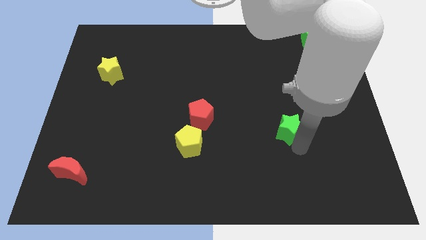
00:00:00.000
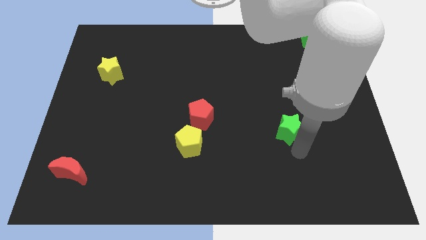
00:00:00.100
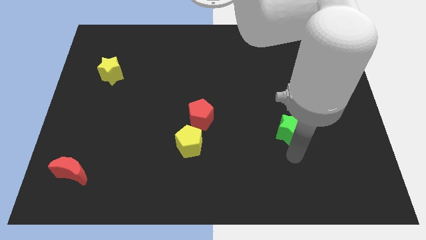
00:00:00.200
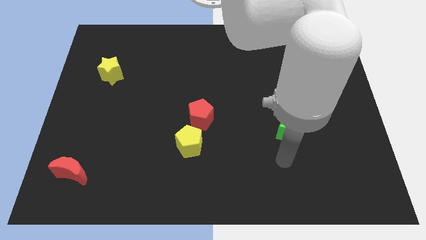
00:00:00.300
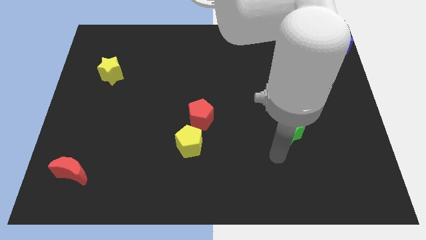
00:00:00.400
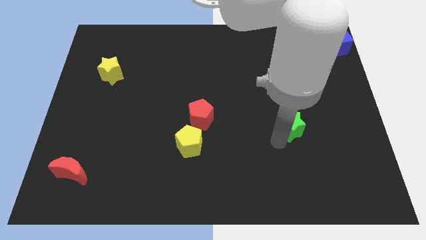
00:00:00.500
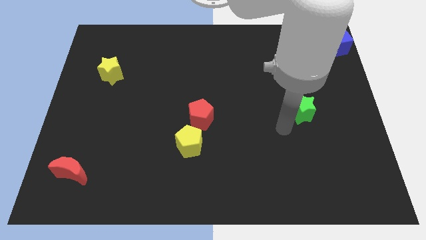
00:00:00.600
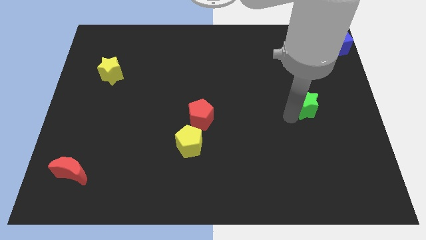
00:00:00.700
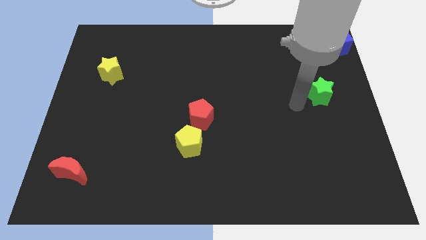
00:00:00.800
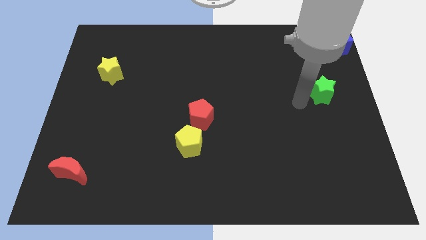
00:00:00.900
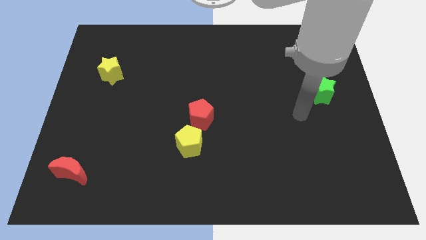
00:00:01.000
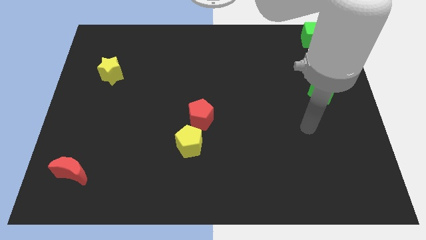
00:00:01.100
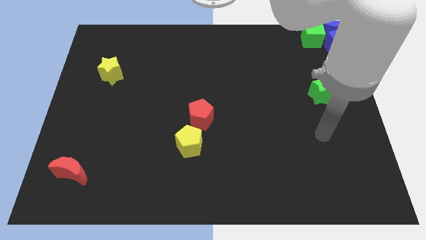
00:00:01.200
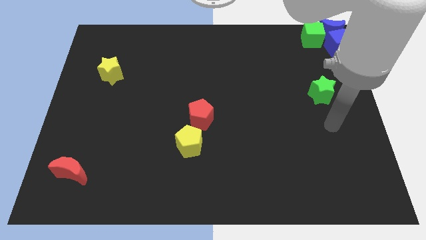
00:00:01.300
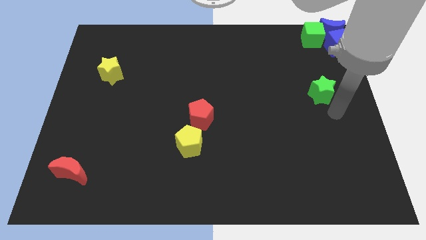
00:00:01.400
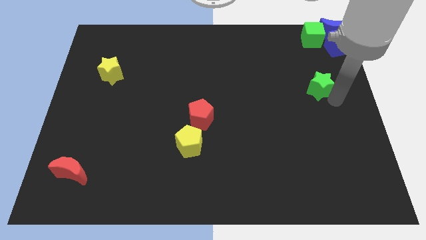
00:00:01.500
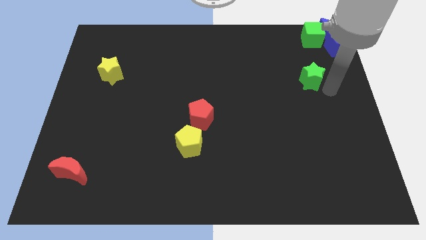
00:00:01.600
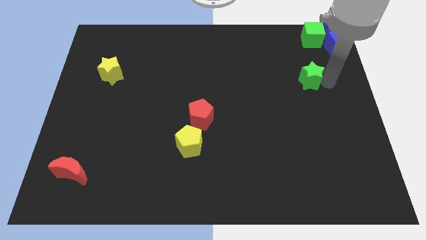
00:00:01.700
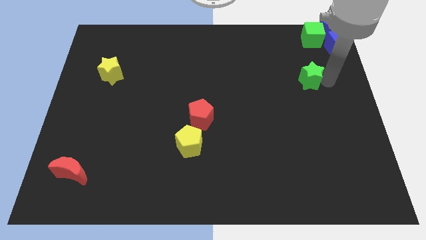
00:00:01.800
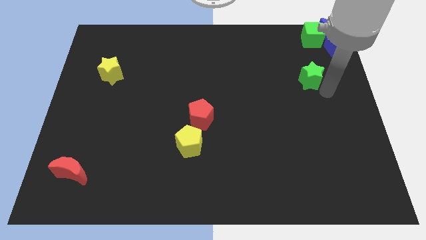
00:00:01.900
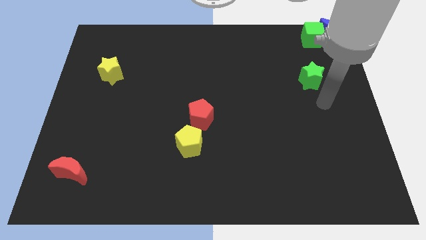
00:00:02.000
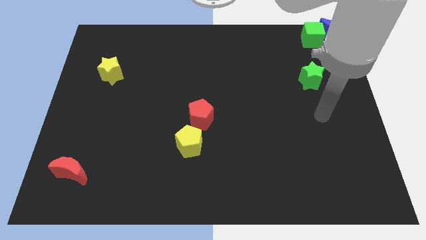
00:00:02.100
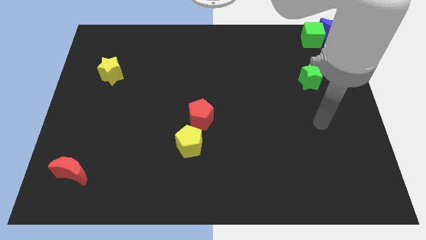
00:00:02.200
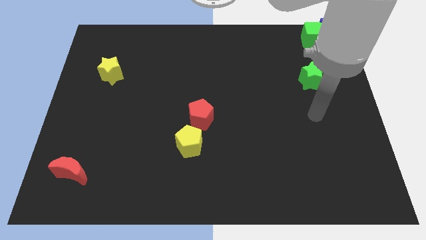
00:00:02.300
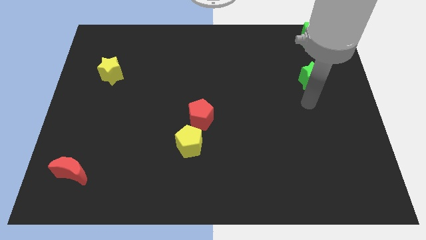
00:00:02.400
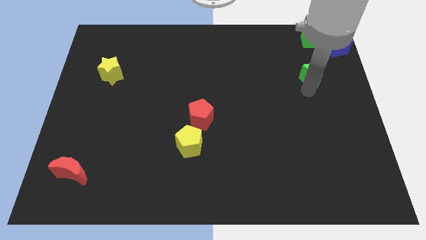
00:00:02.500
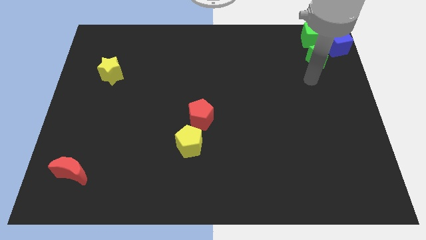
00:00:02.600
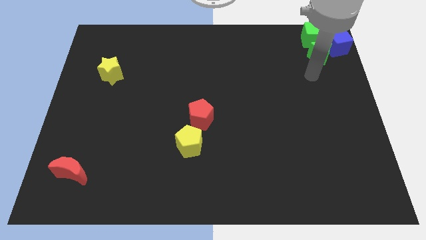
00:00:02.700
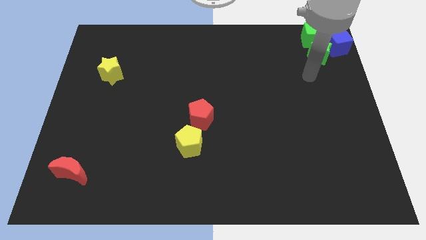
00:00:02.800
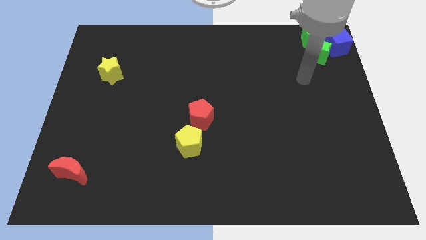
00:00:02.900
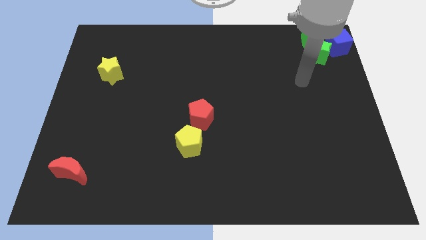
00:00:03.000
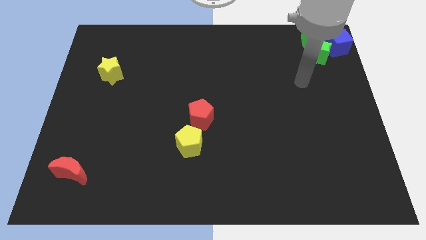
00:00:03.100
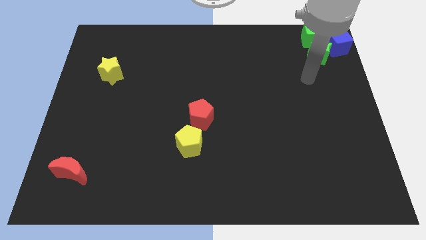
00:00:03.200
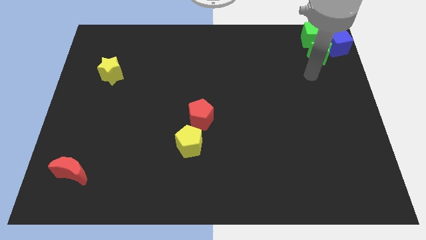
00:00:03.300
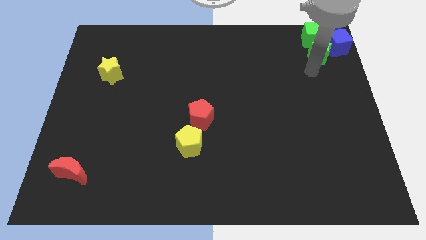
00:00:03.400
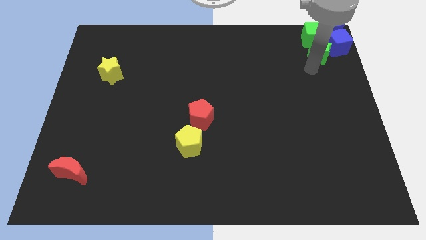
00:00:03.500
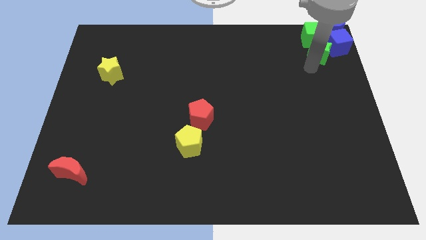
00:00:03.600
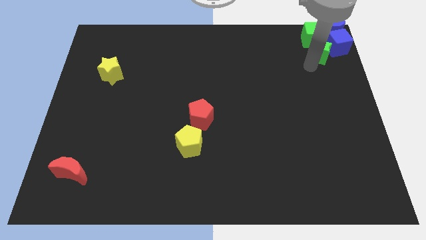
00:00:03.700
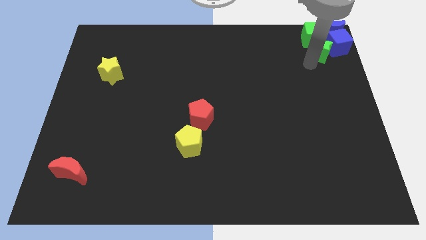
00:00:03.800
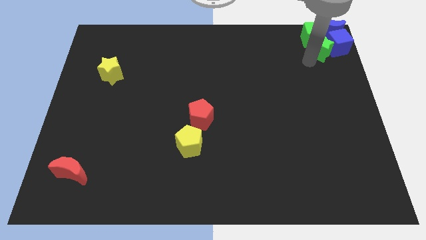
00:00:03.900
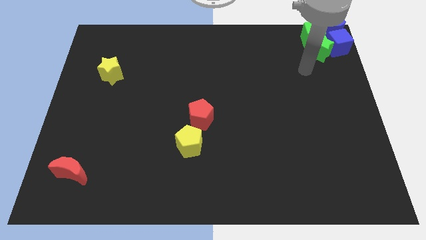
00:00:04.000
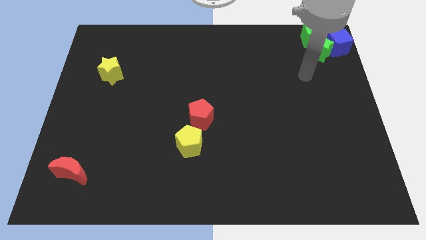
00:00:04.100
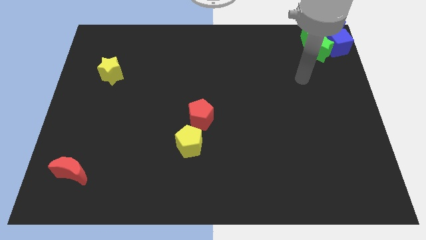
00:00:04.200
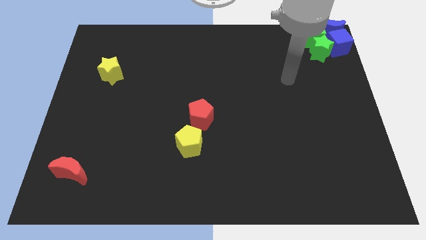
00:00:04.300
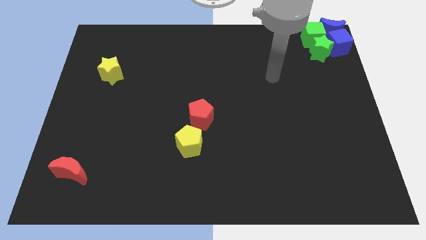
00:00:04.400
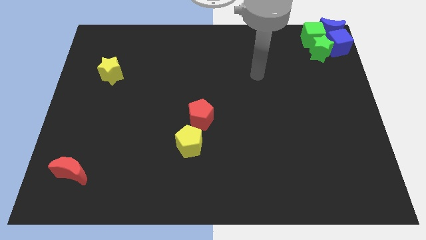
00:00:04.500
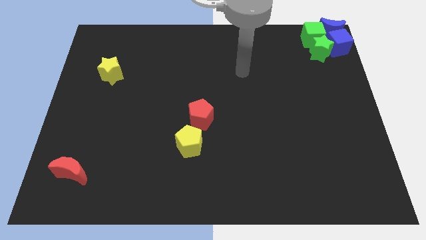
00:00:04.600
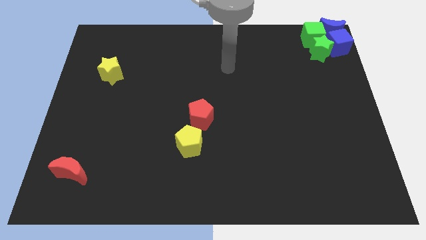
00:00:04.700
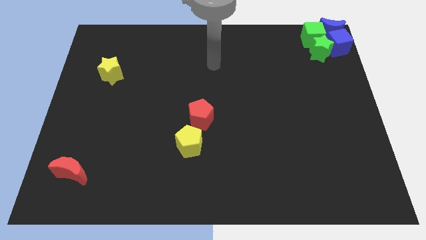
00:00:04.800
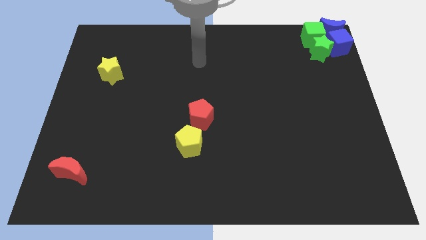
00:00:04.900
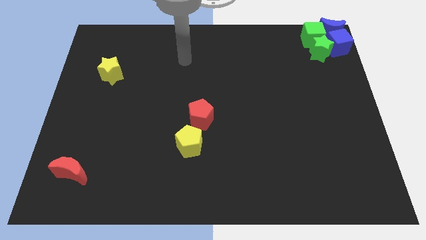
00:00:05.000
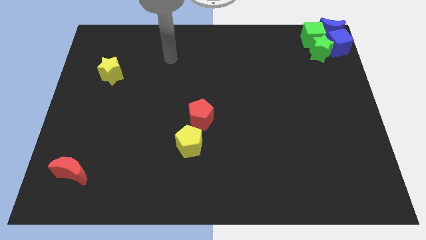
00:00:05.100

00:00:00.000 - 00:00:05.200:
place the green star below the green cube

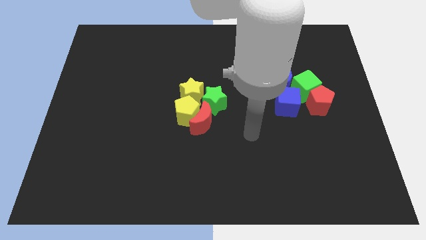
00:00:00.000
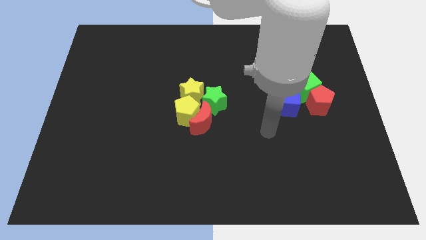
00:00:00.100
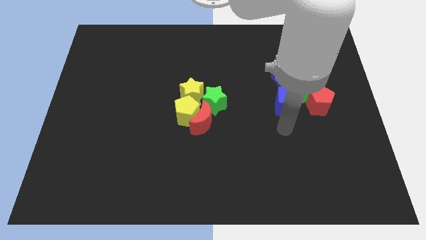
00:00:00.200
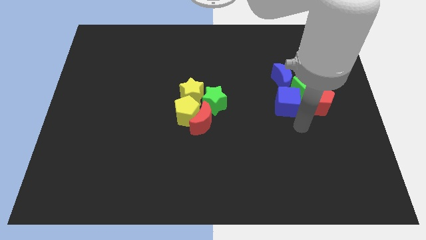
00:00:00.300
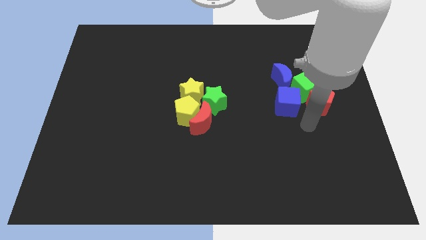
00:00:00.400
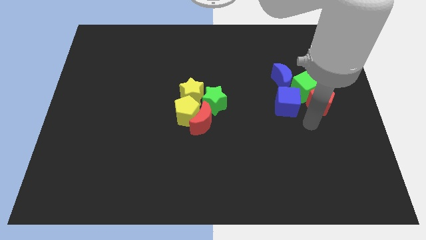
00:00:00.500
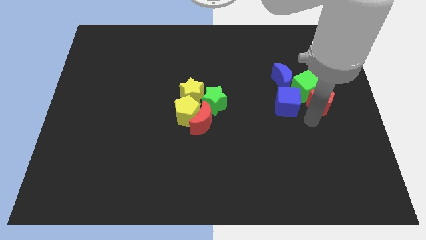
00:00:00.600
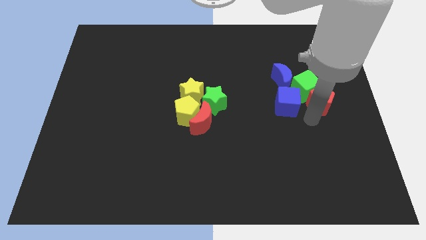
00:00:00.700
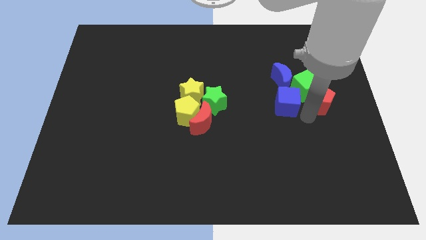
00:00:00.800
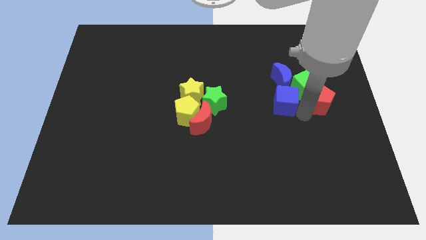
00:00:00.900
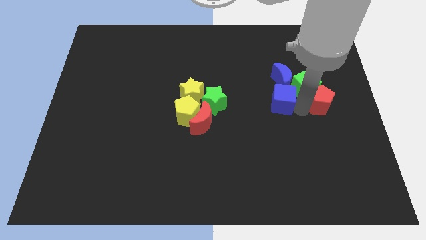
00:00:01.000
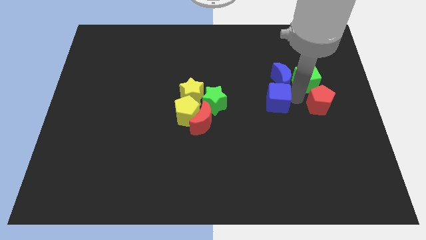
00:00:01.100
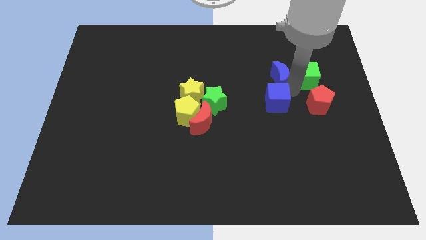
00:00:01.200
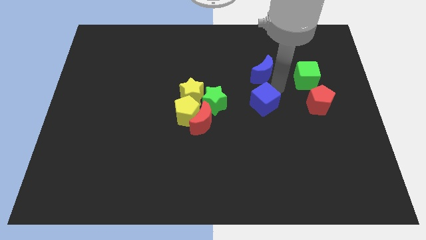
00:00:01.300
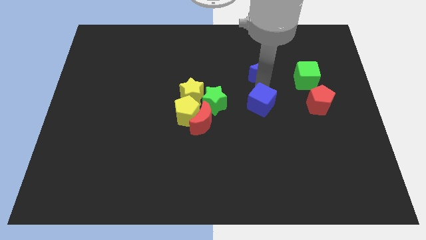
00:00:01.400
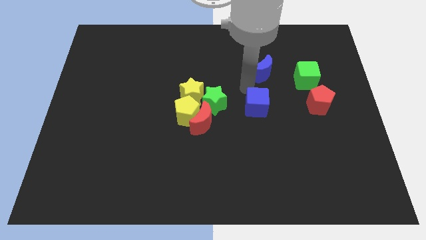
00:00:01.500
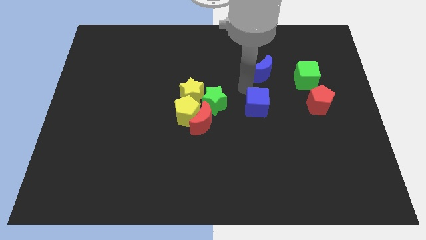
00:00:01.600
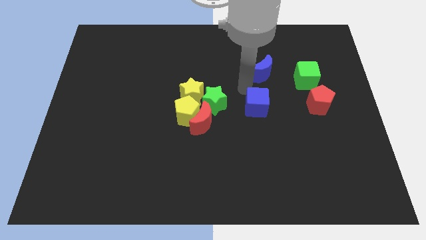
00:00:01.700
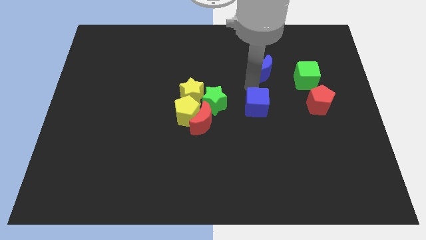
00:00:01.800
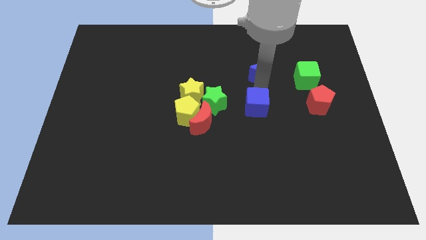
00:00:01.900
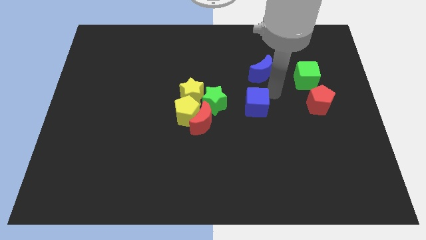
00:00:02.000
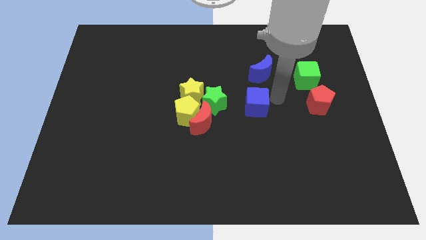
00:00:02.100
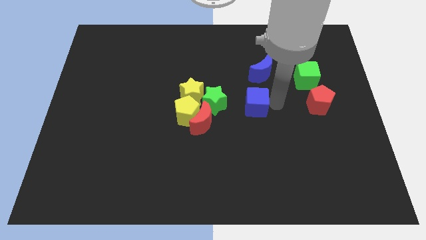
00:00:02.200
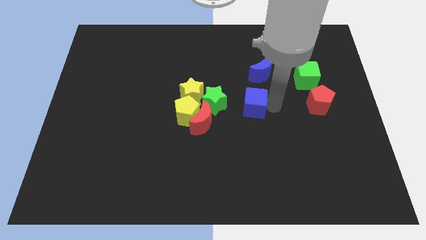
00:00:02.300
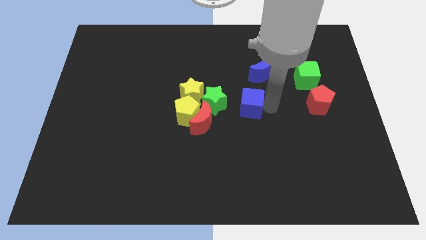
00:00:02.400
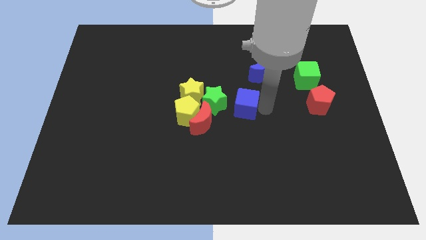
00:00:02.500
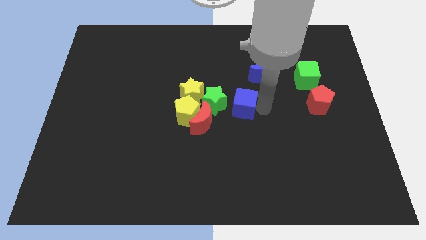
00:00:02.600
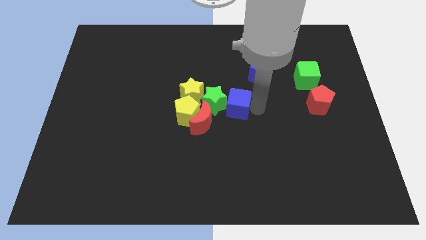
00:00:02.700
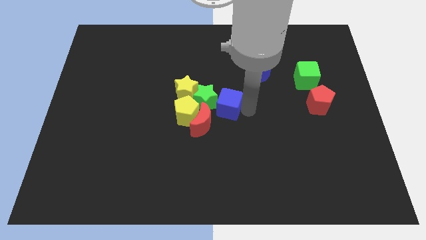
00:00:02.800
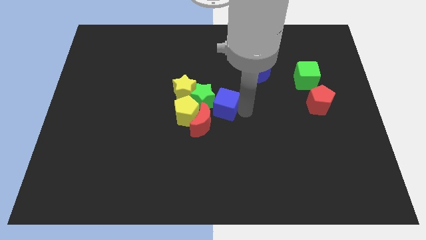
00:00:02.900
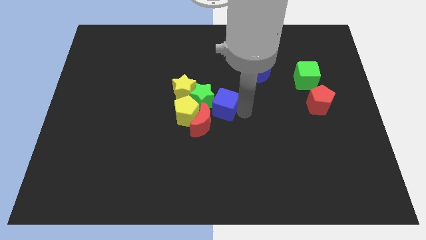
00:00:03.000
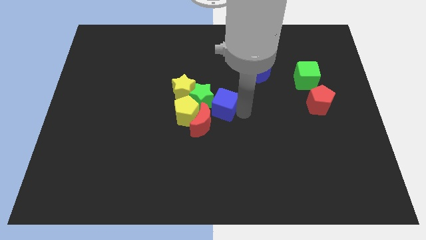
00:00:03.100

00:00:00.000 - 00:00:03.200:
separate blue crescent and blue cube

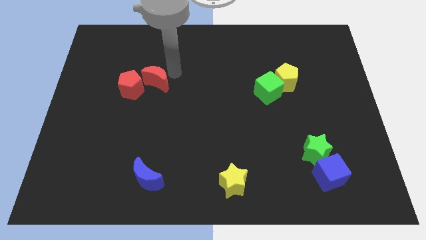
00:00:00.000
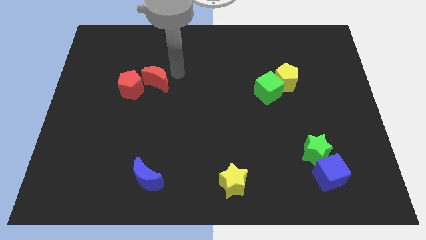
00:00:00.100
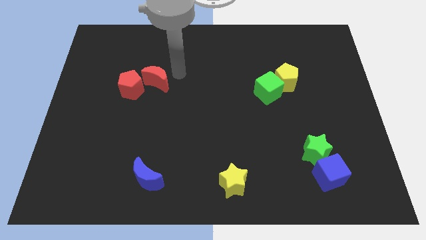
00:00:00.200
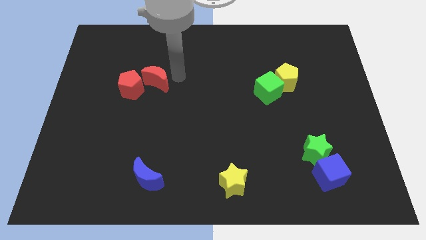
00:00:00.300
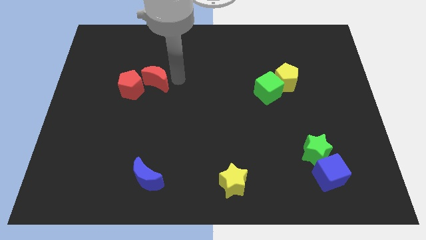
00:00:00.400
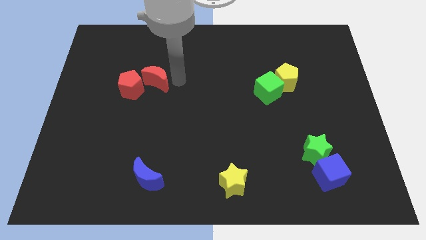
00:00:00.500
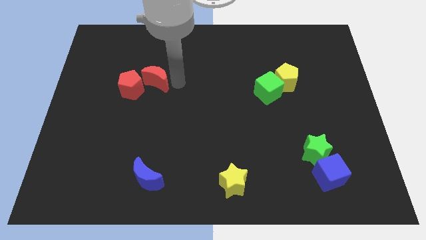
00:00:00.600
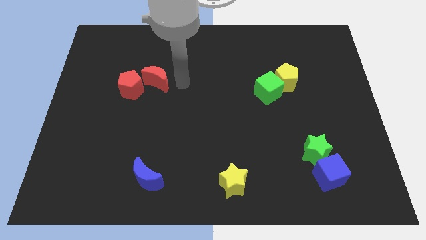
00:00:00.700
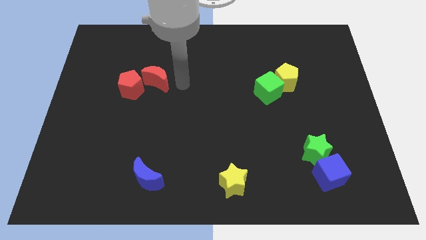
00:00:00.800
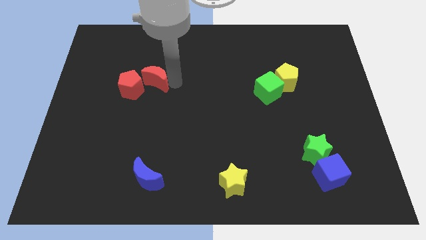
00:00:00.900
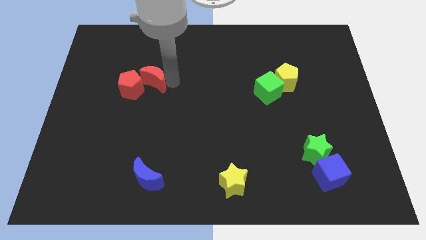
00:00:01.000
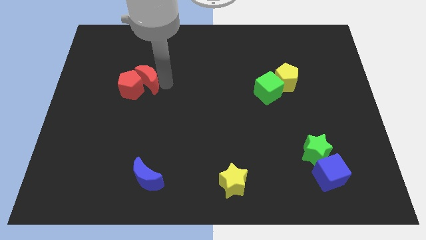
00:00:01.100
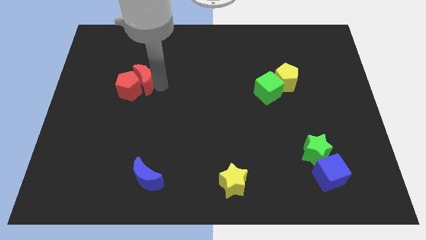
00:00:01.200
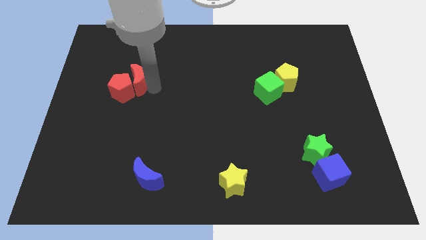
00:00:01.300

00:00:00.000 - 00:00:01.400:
push red crescent into red pentagon
